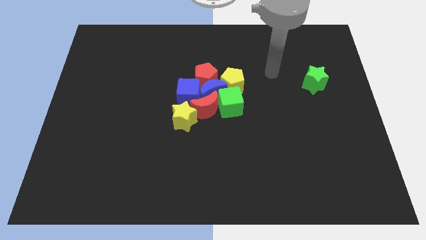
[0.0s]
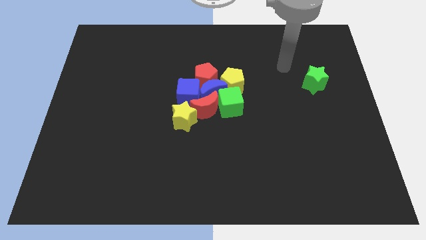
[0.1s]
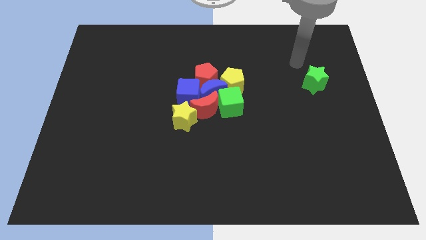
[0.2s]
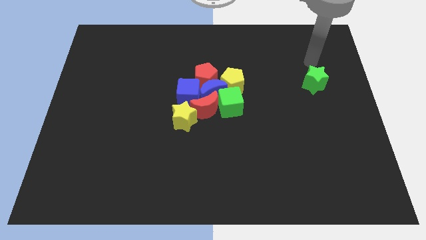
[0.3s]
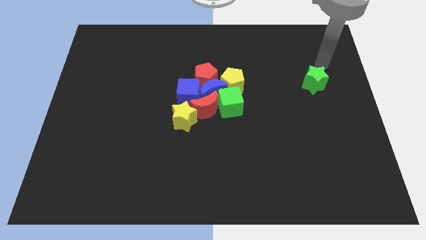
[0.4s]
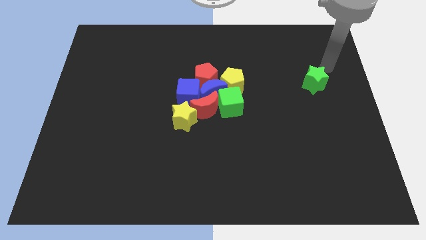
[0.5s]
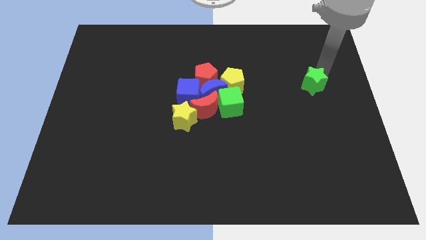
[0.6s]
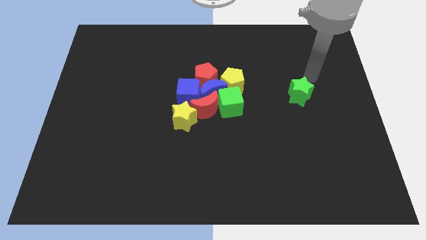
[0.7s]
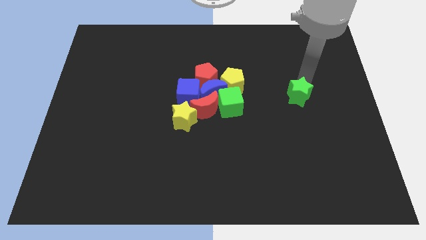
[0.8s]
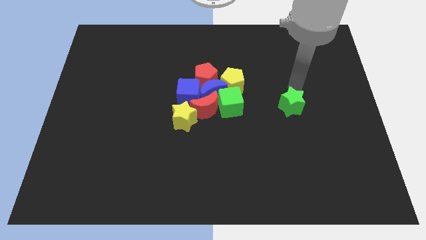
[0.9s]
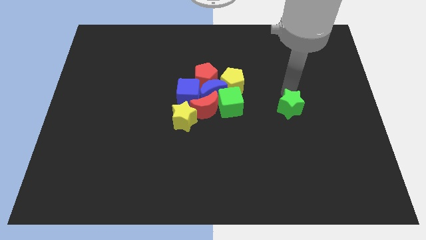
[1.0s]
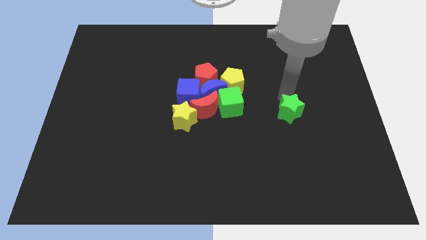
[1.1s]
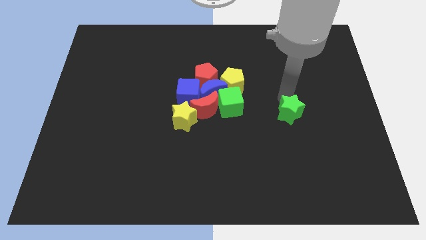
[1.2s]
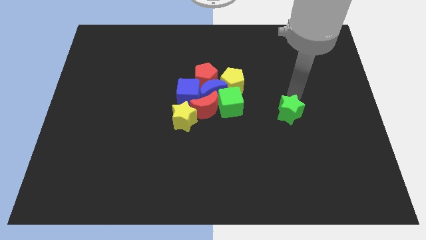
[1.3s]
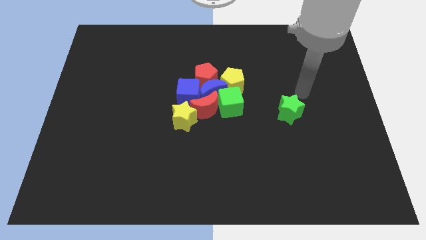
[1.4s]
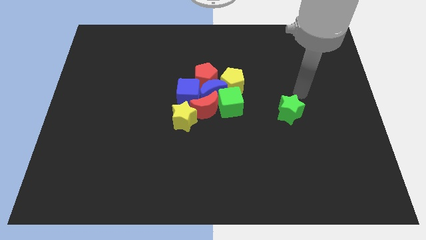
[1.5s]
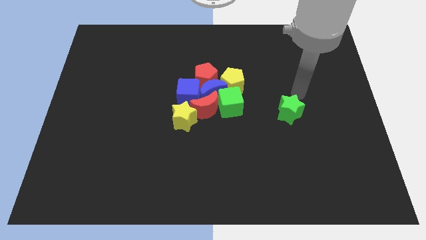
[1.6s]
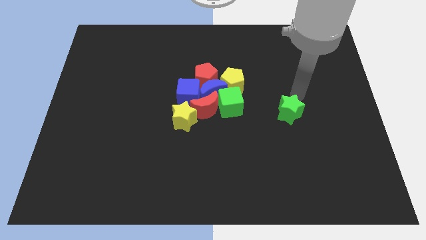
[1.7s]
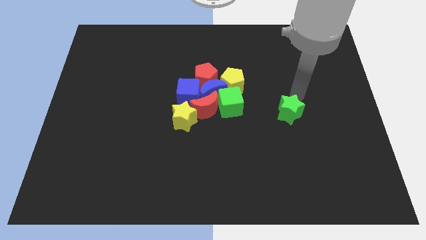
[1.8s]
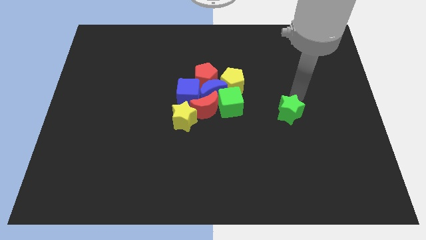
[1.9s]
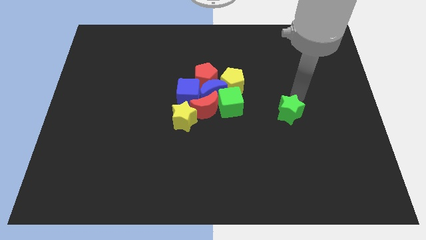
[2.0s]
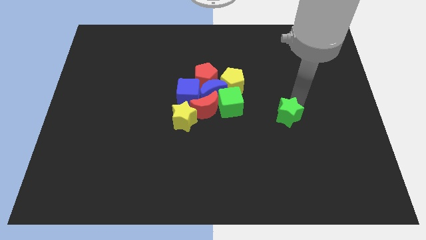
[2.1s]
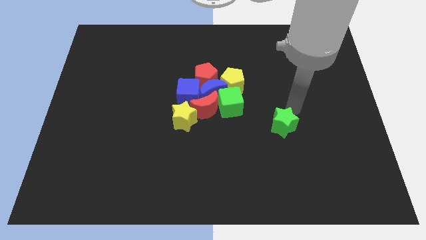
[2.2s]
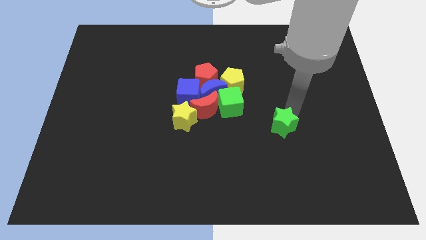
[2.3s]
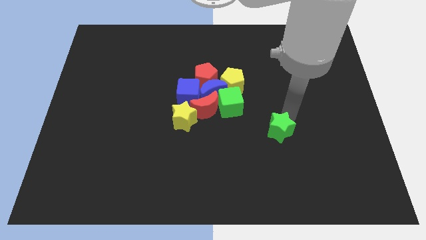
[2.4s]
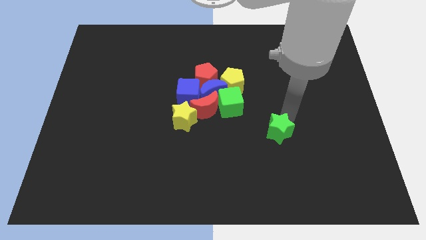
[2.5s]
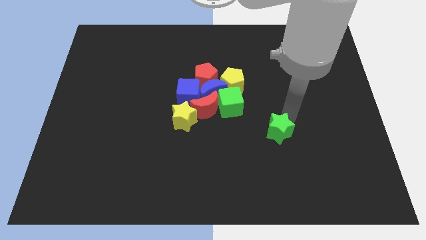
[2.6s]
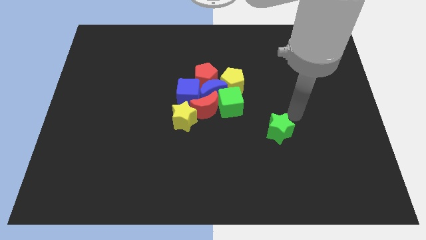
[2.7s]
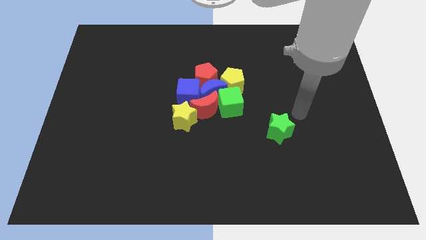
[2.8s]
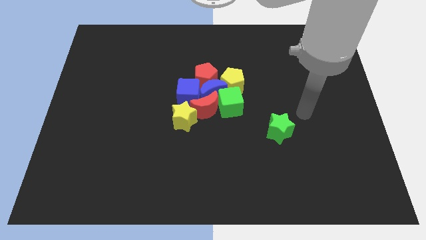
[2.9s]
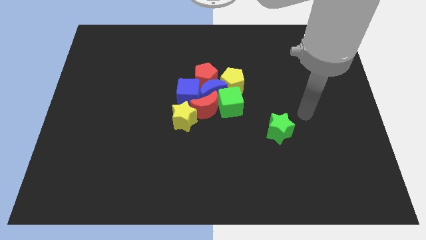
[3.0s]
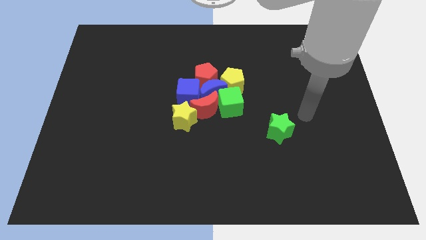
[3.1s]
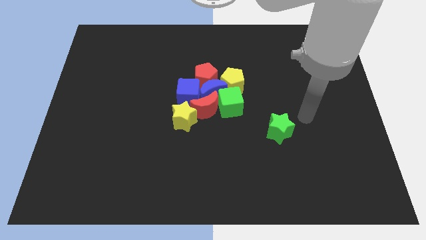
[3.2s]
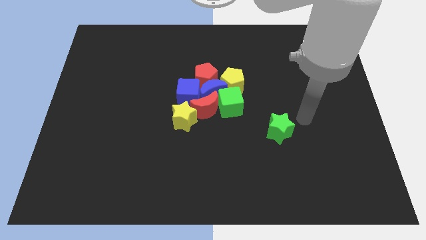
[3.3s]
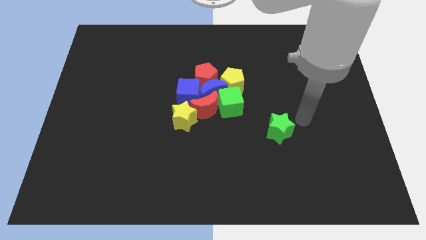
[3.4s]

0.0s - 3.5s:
move the green star towards the middle bottom of the board

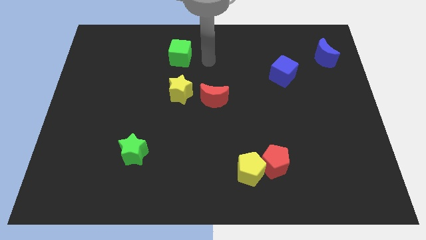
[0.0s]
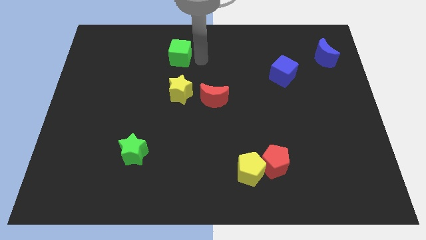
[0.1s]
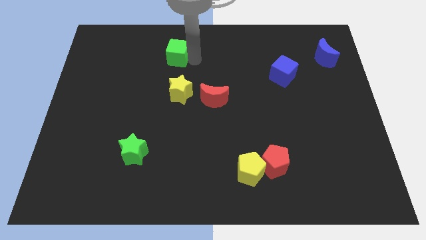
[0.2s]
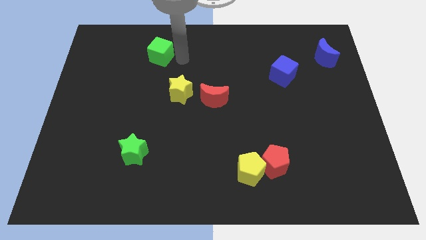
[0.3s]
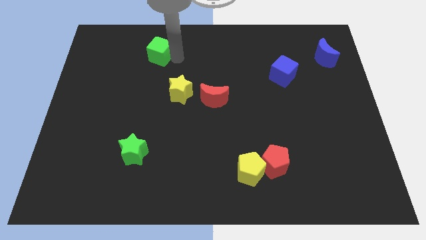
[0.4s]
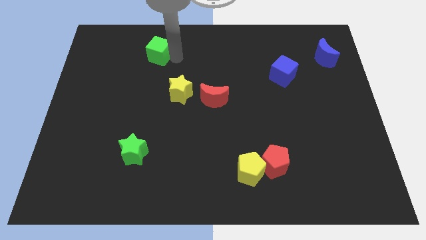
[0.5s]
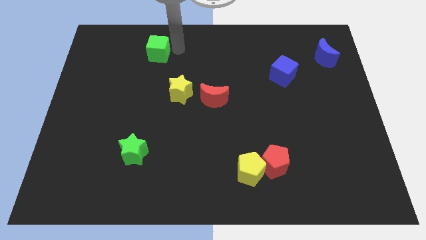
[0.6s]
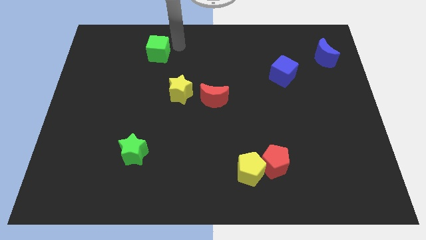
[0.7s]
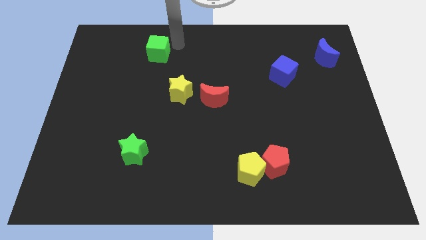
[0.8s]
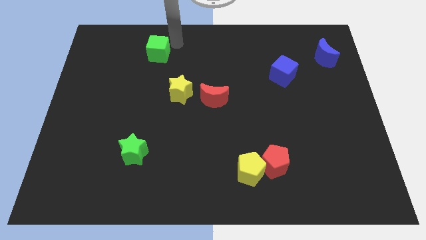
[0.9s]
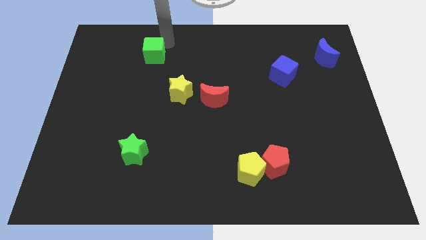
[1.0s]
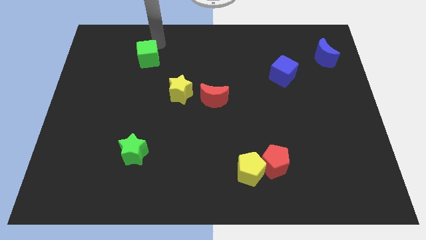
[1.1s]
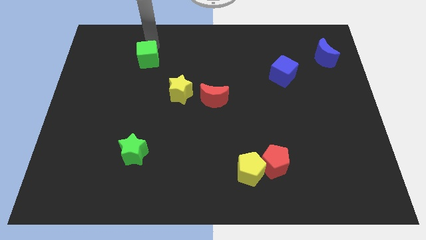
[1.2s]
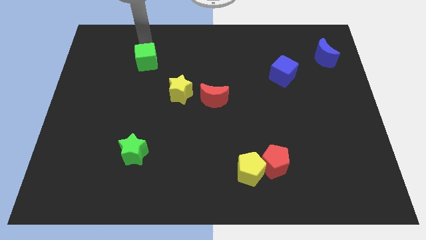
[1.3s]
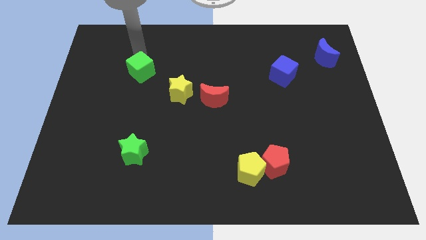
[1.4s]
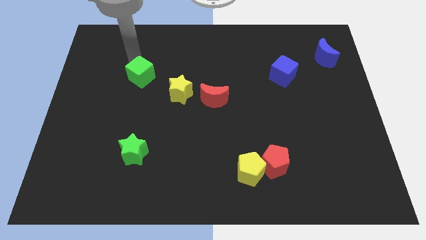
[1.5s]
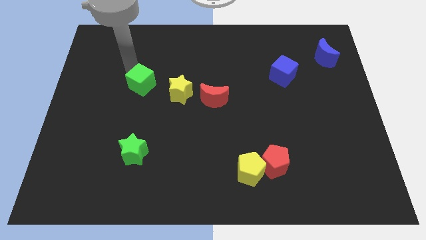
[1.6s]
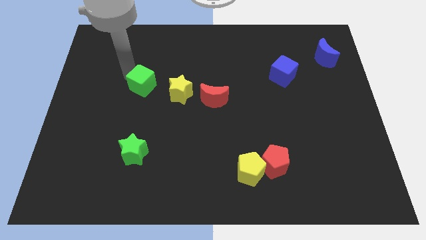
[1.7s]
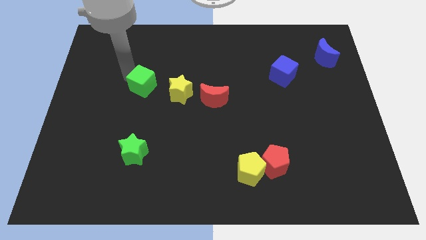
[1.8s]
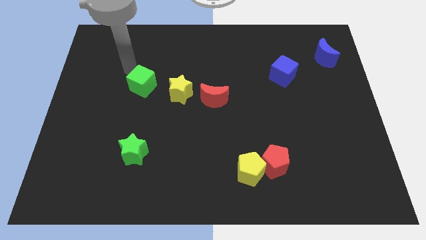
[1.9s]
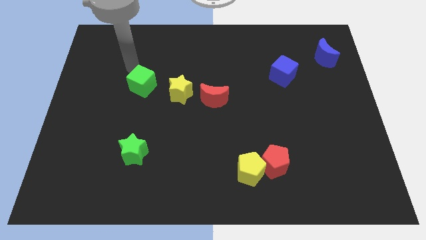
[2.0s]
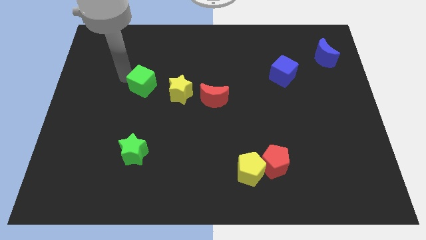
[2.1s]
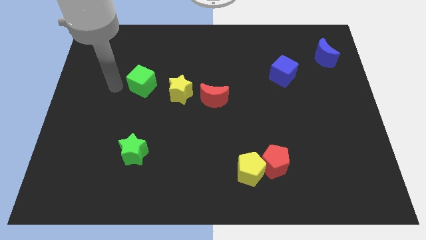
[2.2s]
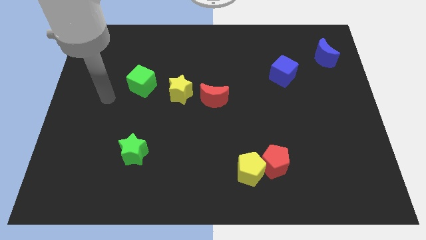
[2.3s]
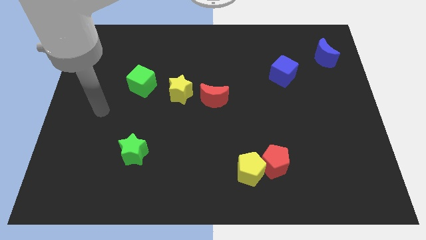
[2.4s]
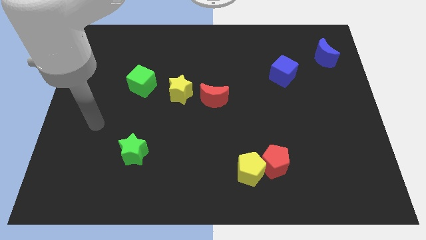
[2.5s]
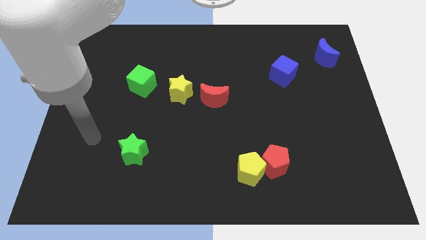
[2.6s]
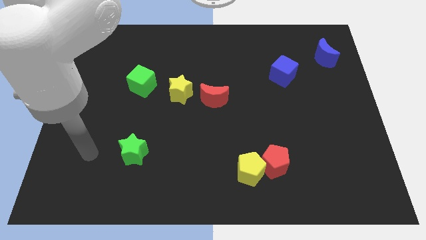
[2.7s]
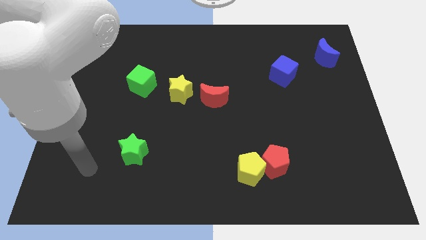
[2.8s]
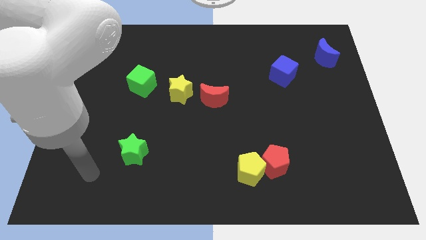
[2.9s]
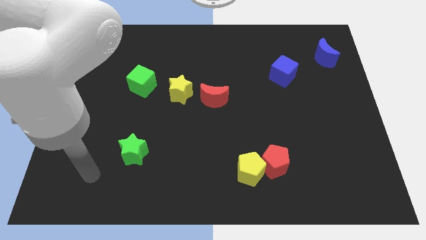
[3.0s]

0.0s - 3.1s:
move green cube to the left of yellow star

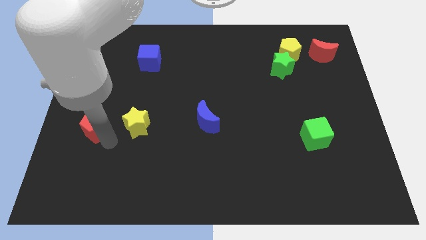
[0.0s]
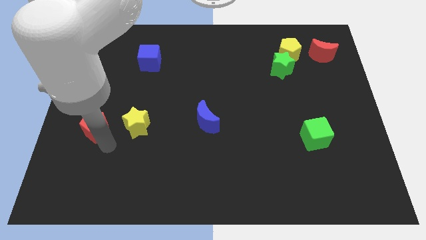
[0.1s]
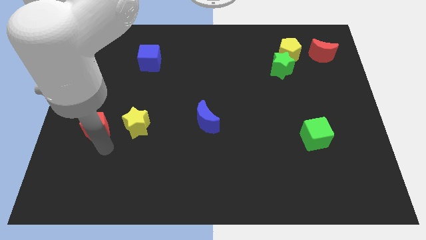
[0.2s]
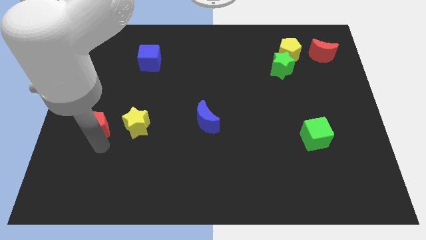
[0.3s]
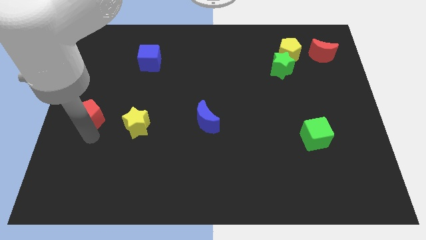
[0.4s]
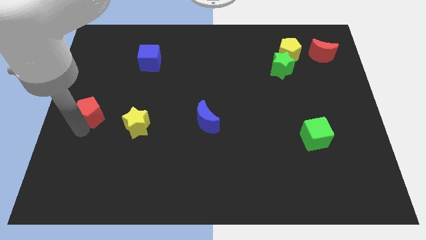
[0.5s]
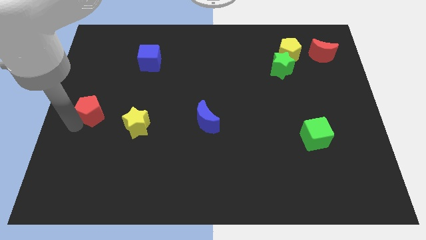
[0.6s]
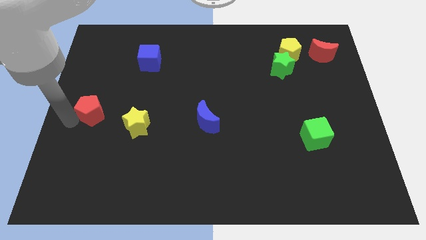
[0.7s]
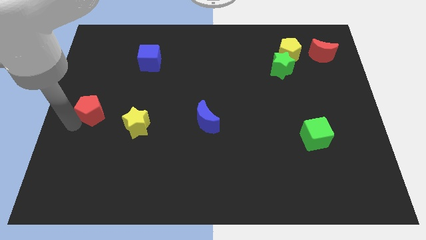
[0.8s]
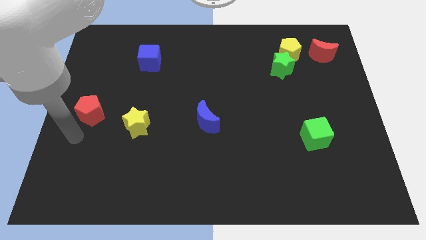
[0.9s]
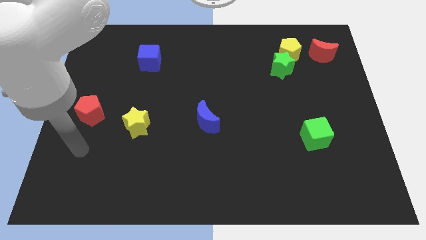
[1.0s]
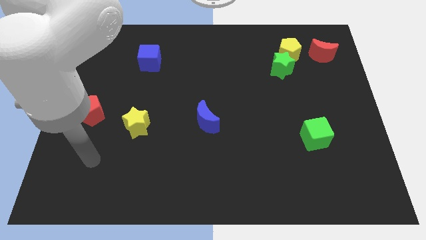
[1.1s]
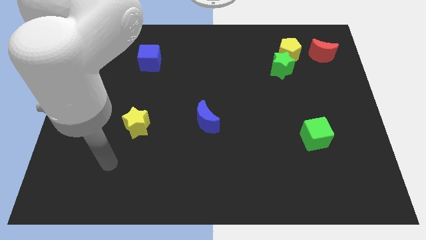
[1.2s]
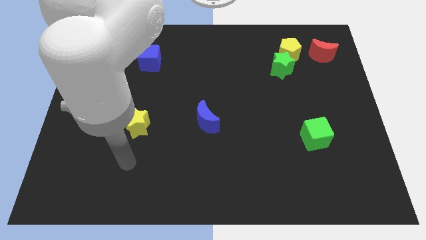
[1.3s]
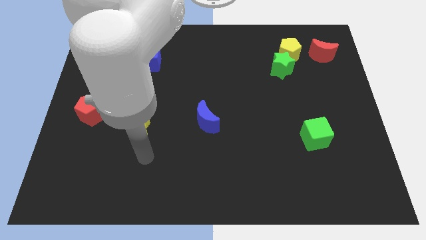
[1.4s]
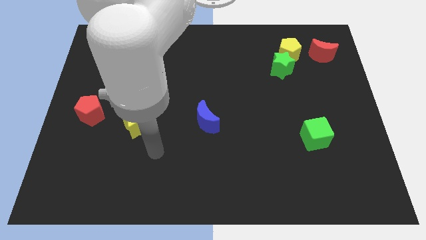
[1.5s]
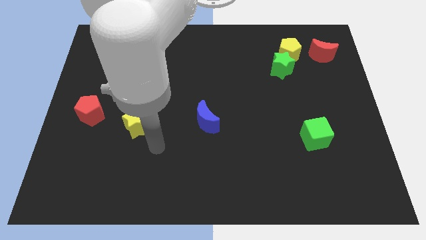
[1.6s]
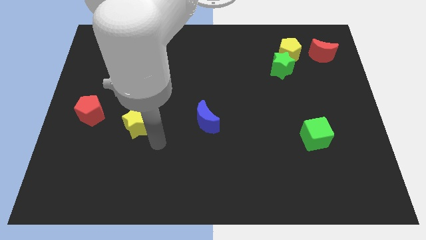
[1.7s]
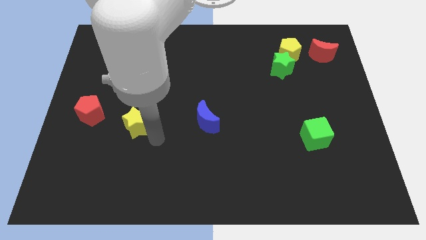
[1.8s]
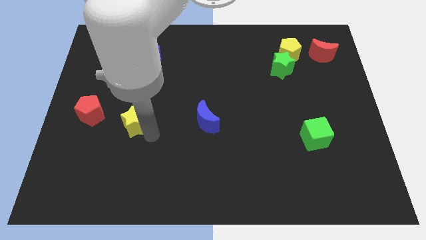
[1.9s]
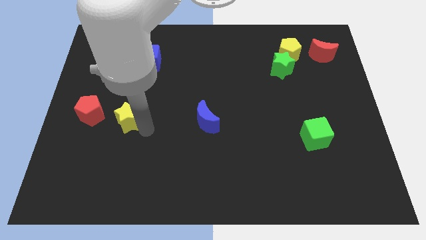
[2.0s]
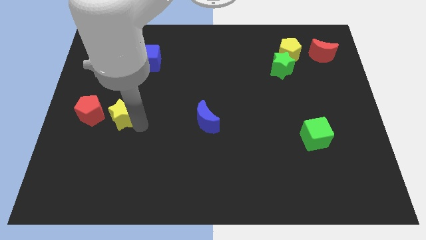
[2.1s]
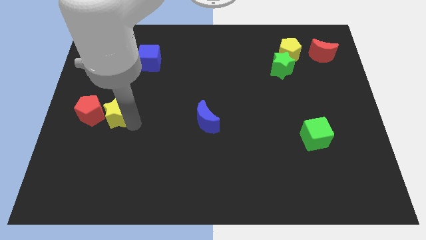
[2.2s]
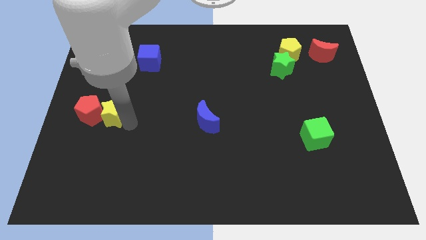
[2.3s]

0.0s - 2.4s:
move yellow star close to red pentagon
